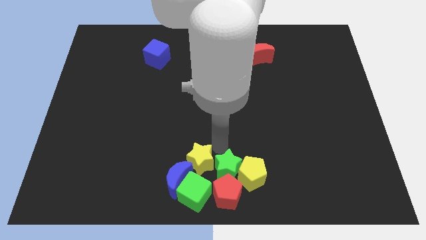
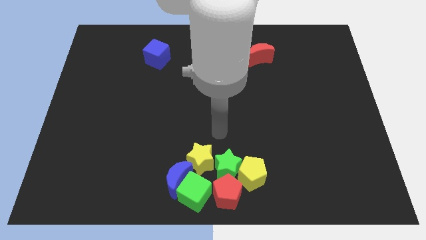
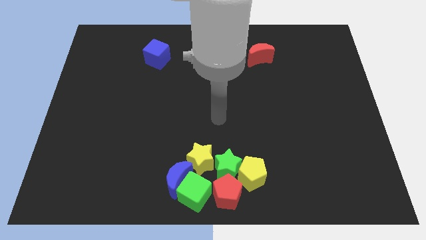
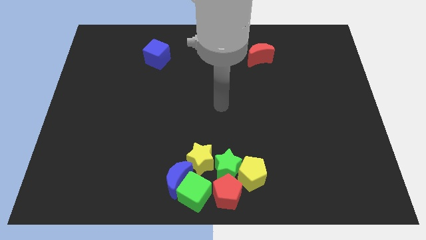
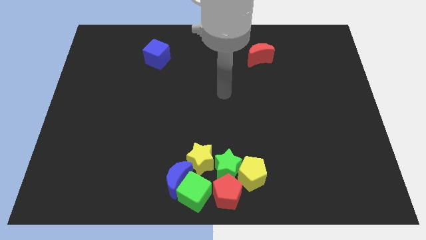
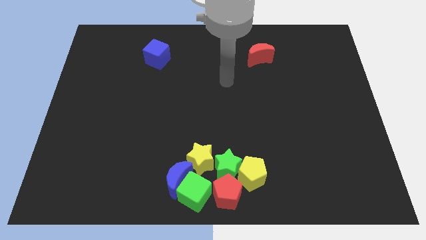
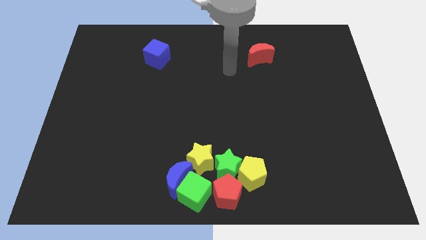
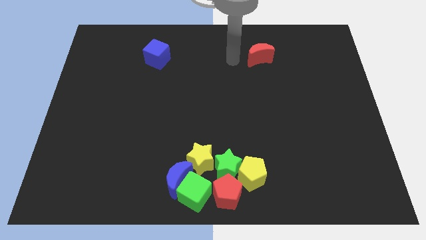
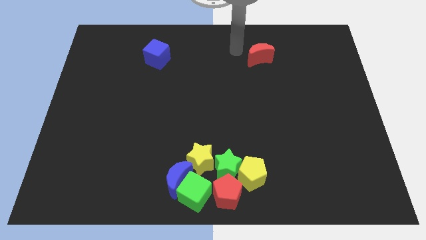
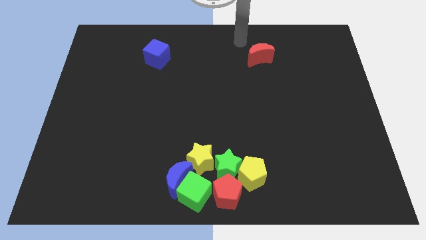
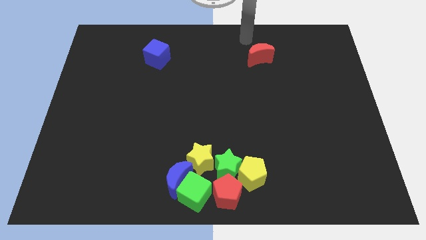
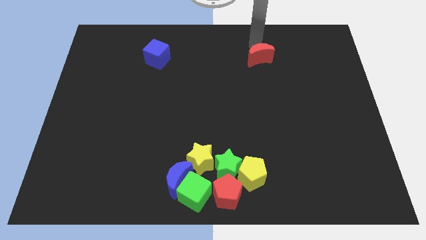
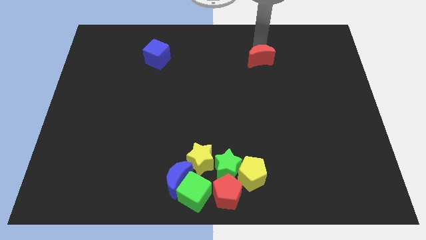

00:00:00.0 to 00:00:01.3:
tap the top side of the red crescent

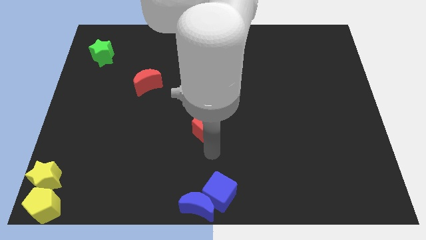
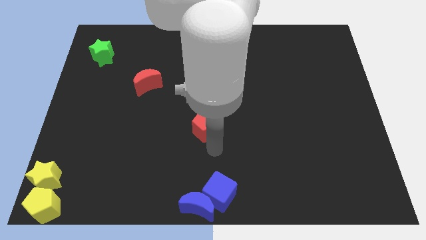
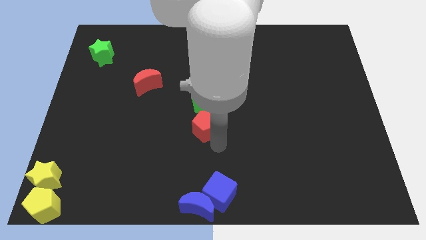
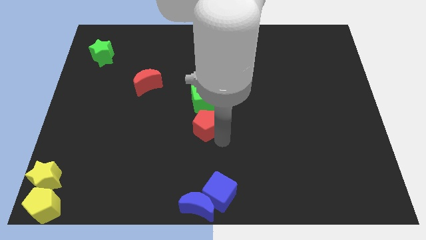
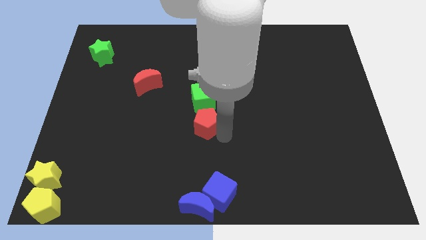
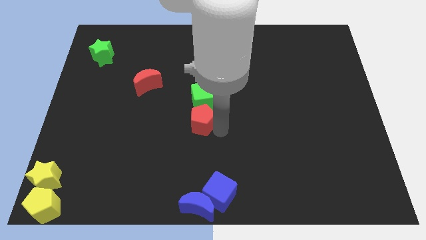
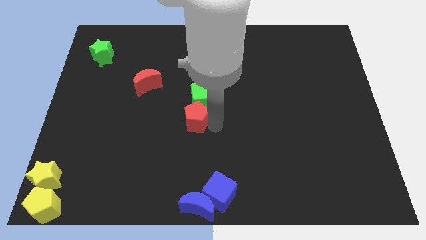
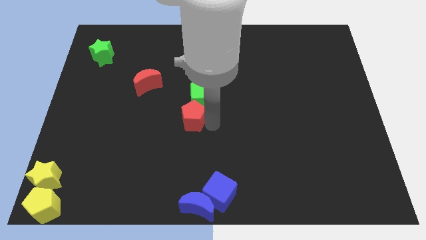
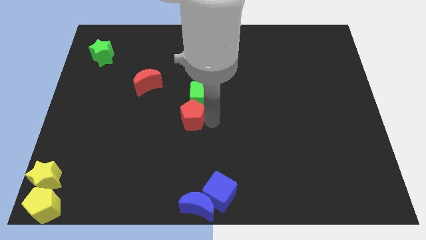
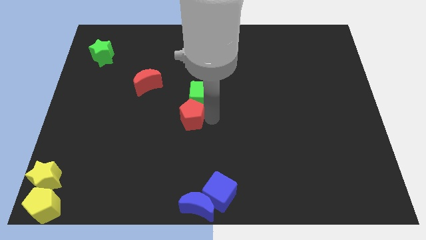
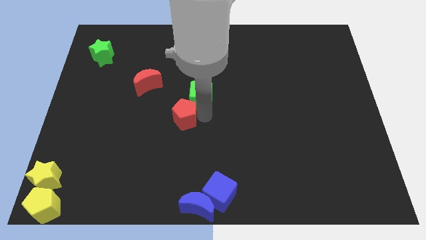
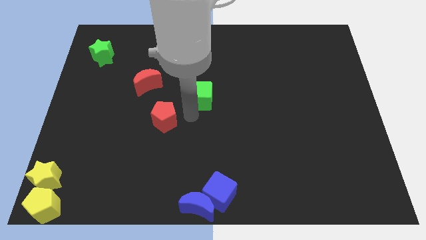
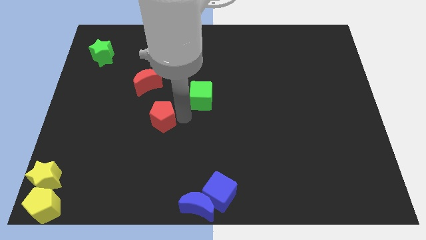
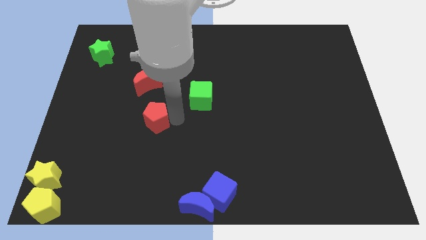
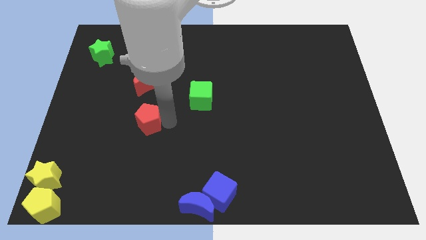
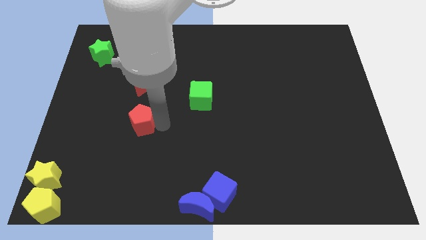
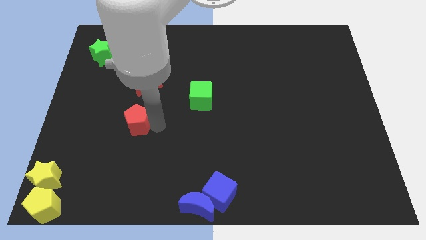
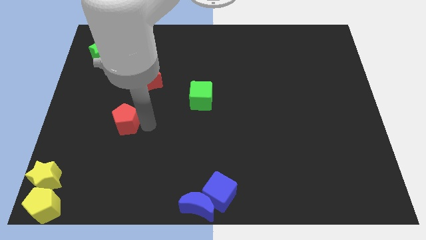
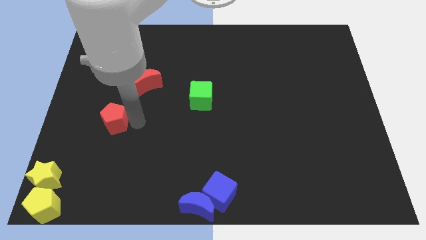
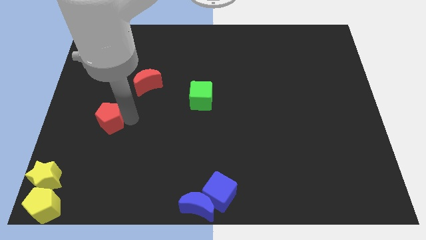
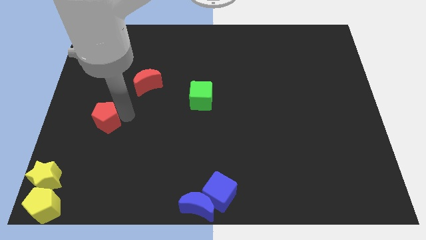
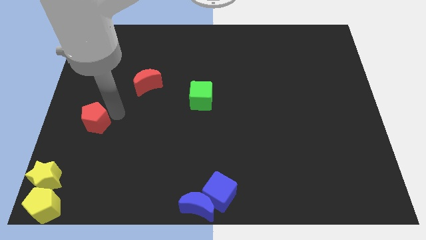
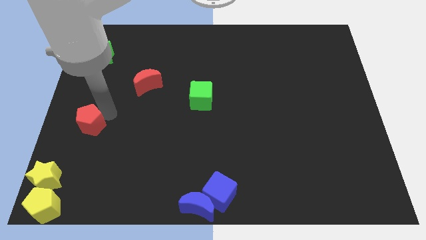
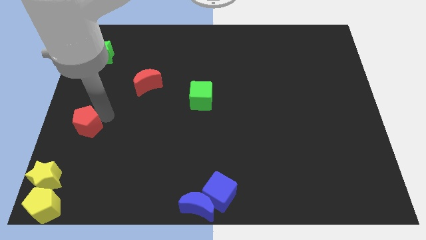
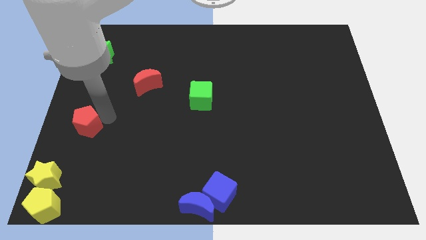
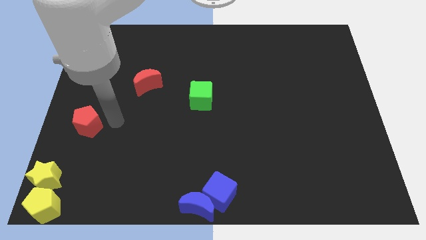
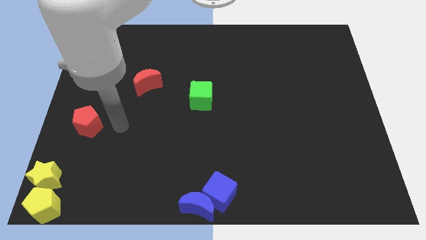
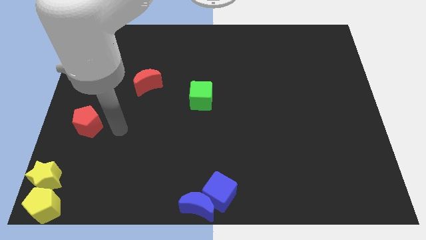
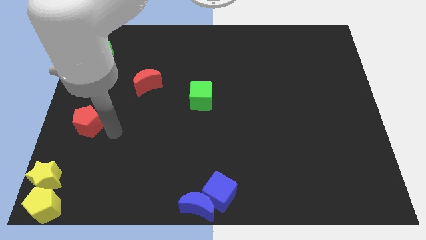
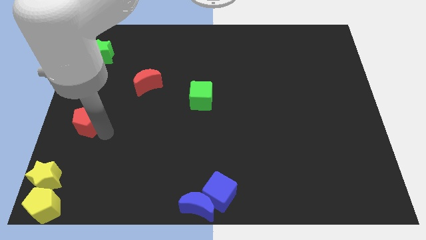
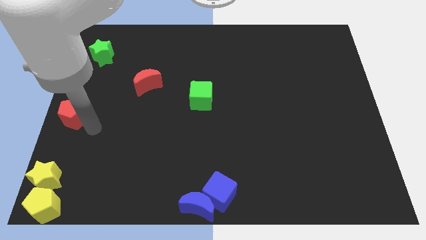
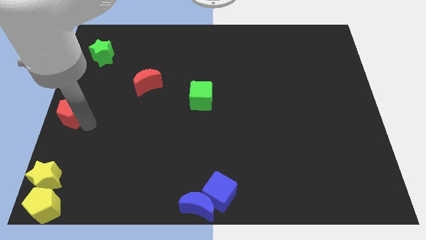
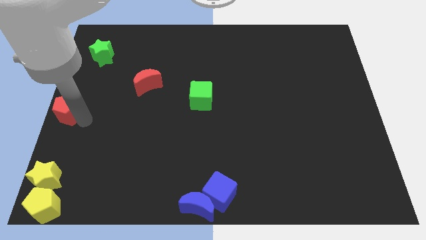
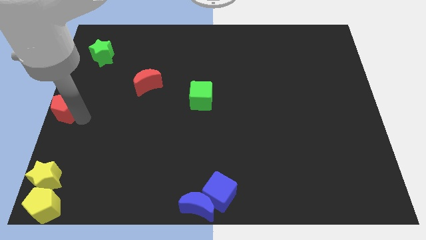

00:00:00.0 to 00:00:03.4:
push the red pentagon towards the left side of the board

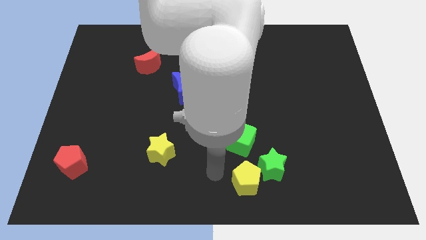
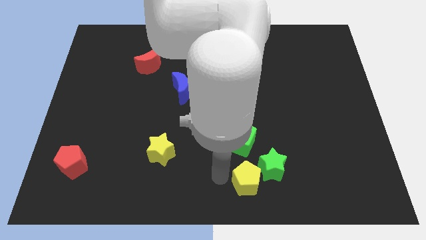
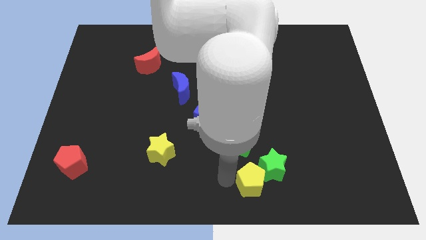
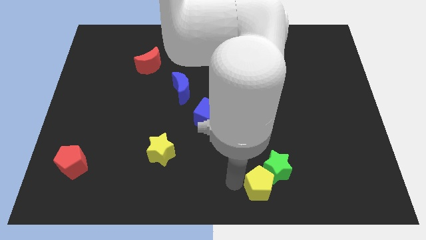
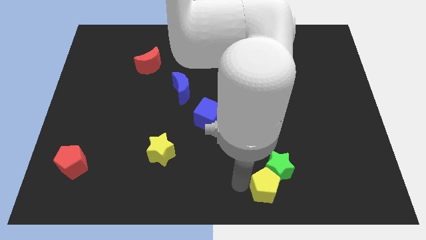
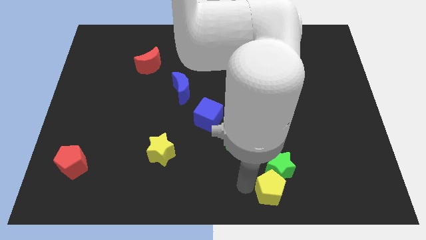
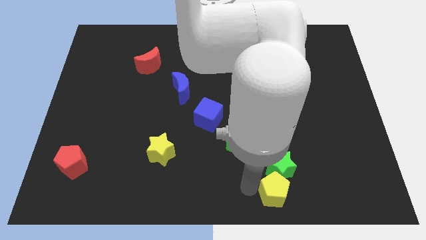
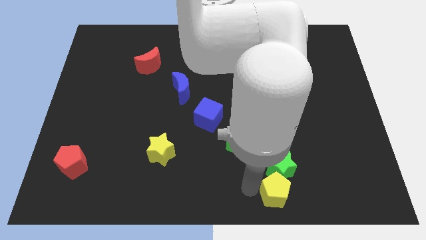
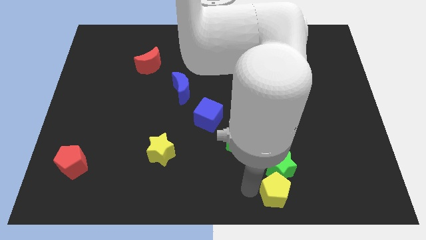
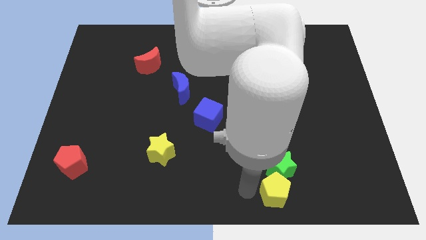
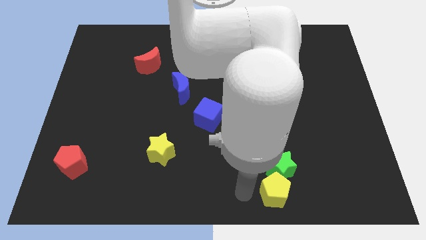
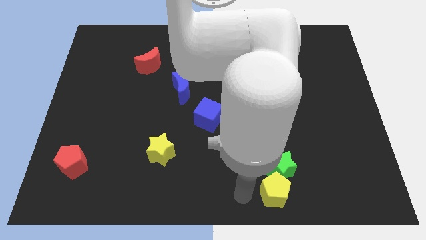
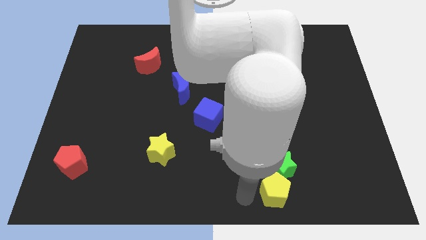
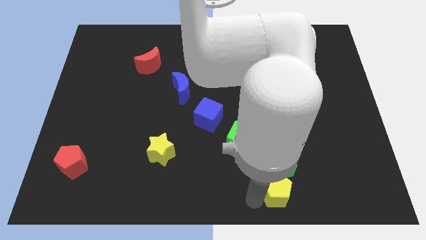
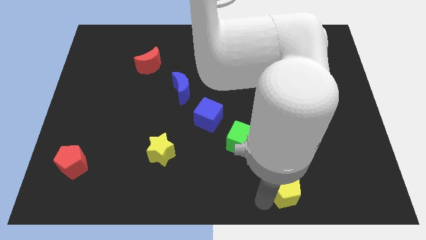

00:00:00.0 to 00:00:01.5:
slide the yellow pentagon to the bottom side of the green star

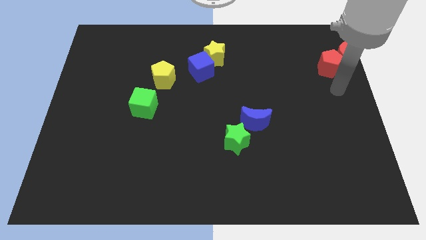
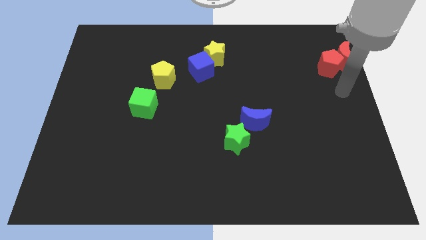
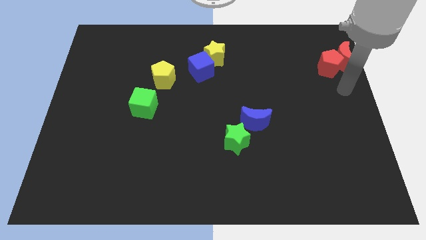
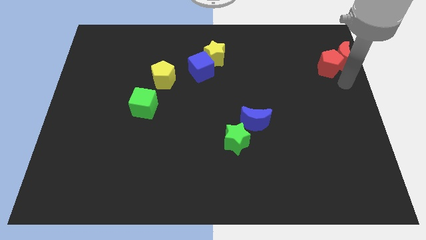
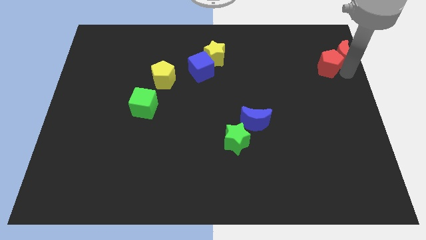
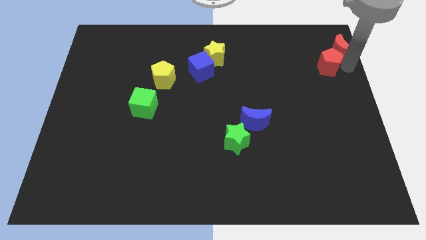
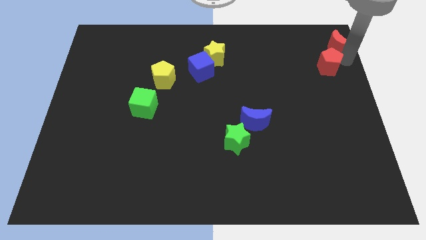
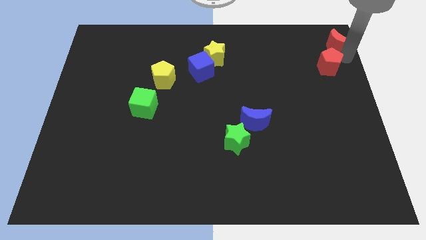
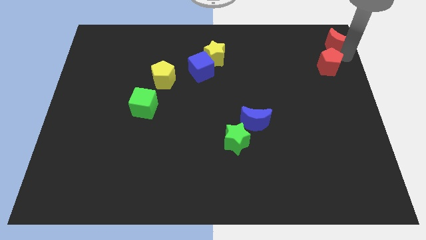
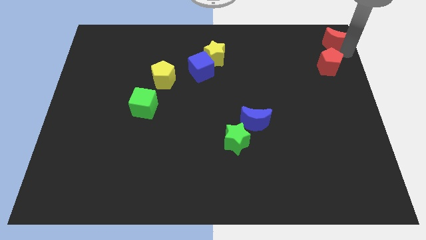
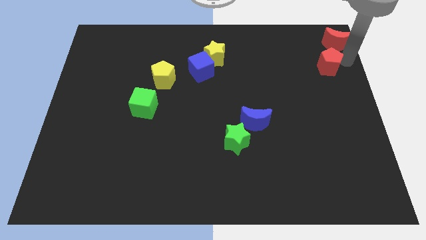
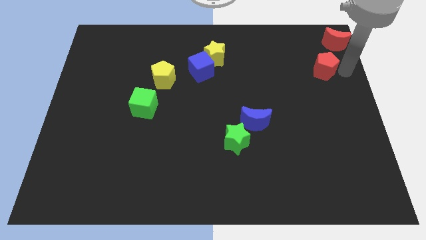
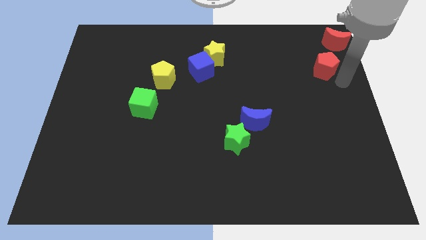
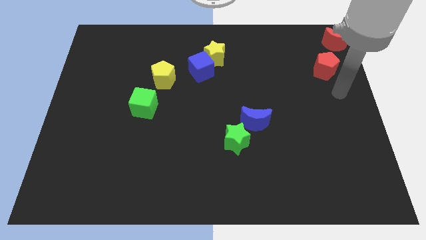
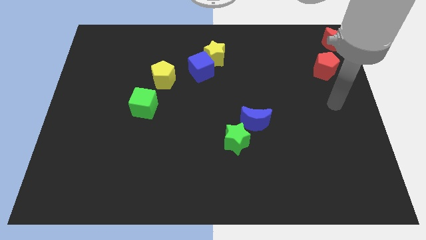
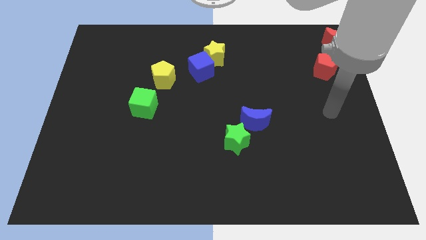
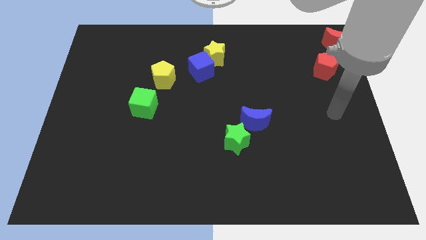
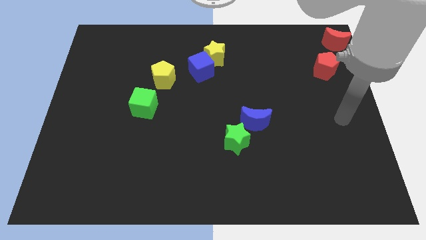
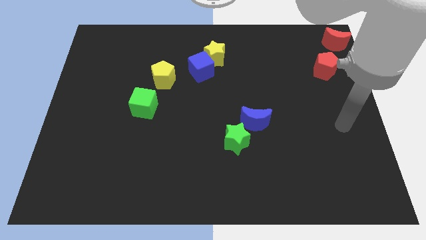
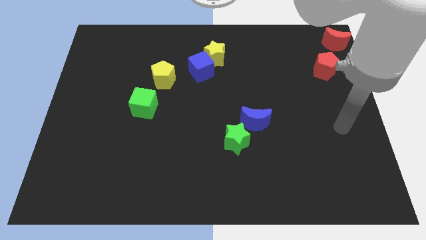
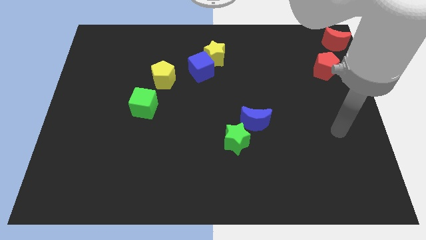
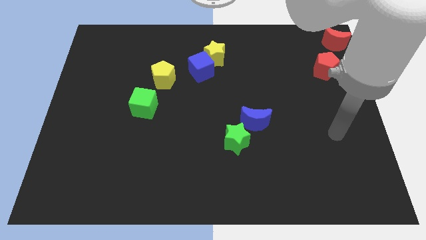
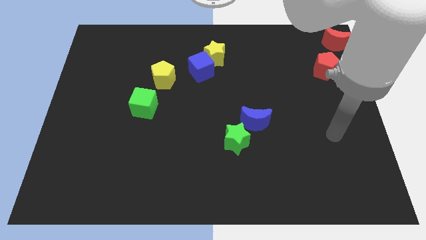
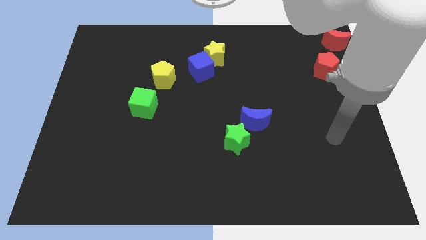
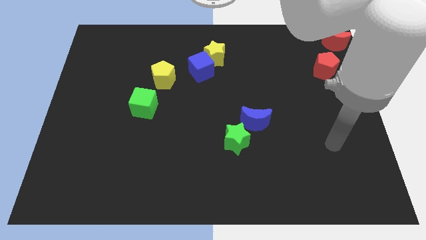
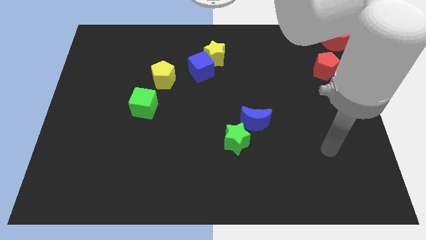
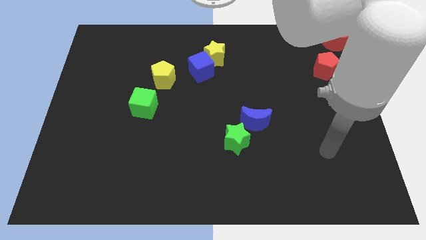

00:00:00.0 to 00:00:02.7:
separate the red blocks of the board
